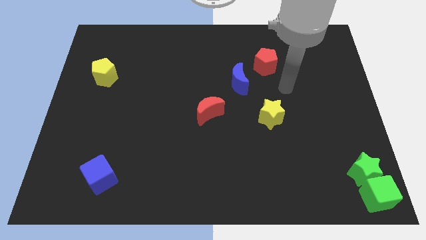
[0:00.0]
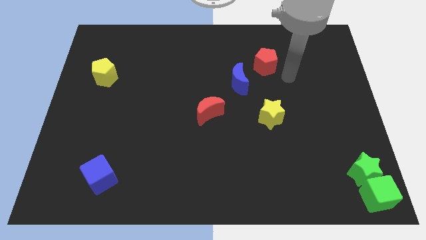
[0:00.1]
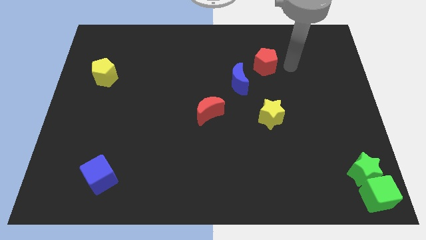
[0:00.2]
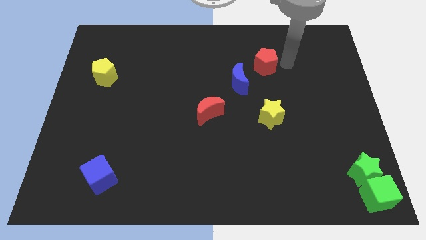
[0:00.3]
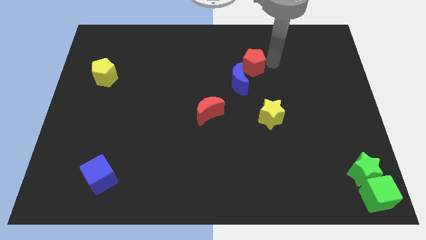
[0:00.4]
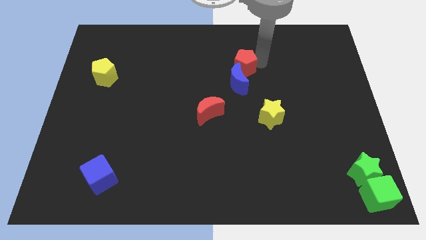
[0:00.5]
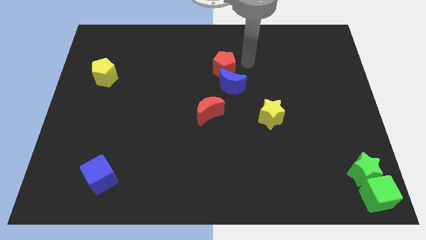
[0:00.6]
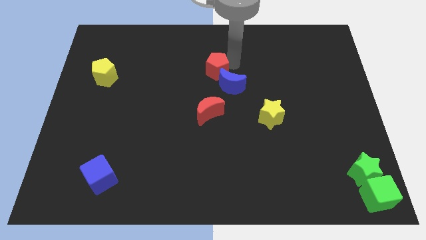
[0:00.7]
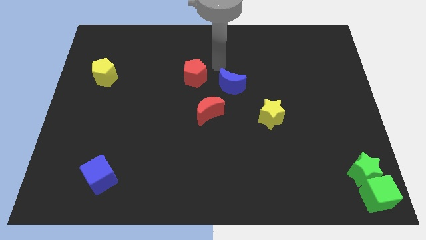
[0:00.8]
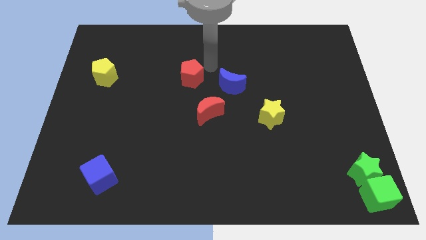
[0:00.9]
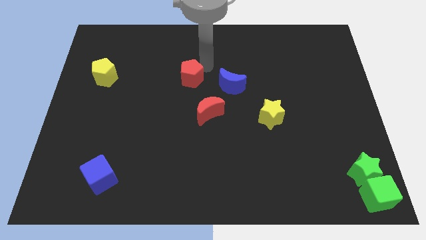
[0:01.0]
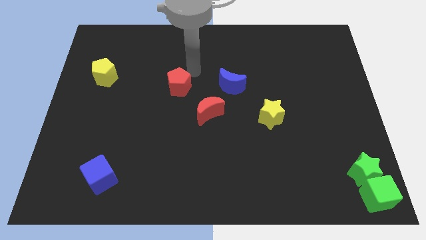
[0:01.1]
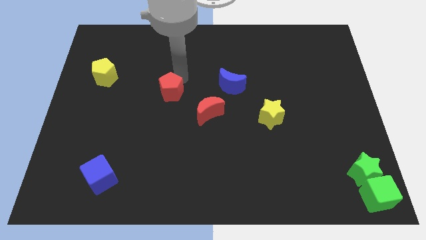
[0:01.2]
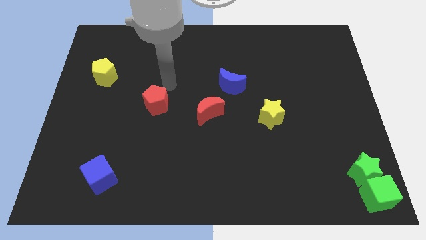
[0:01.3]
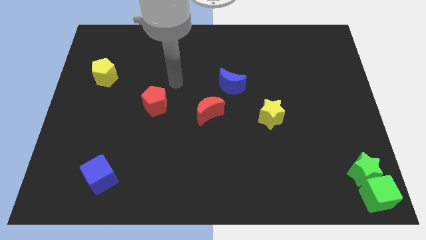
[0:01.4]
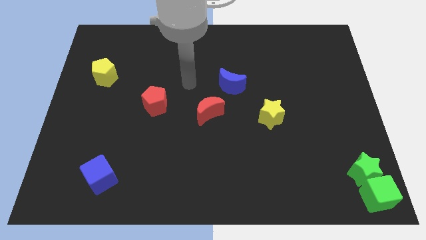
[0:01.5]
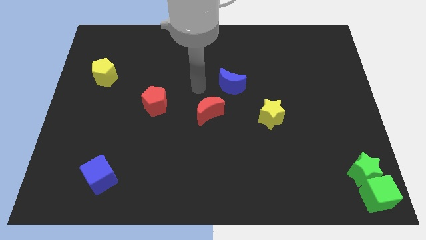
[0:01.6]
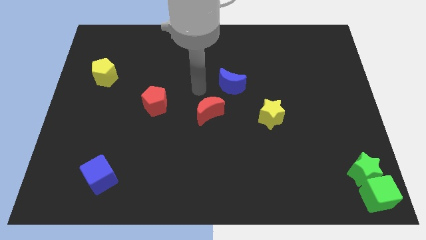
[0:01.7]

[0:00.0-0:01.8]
move the red pentagon to the parallel to the left of the red crescent

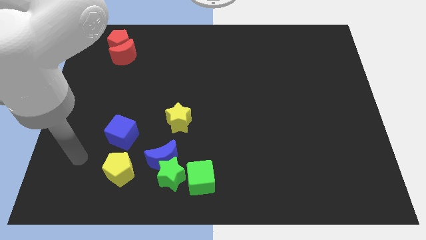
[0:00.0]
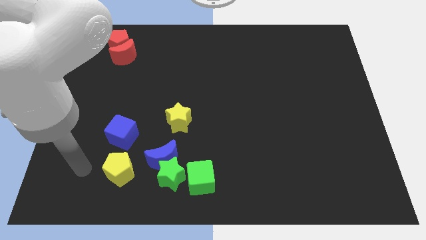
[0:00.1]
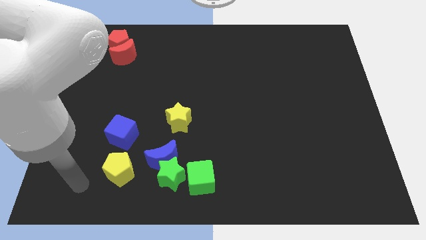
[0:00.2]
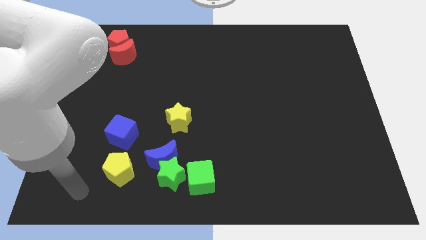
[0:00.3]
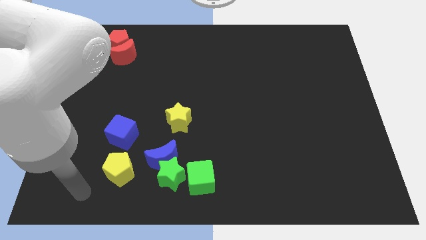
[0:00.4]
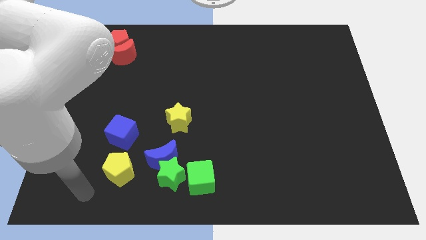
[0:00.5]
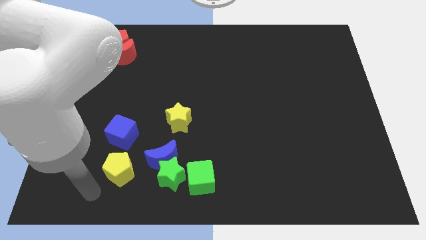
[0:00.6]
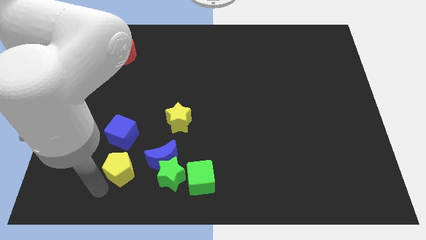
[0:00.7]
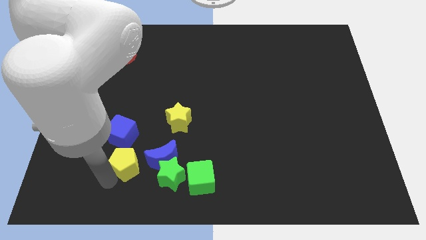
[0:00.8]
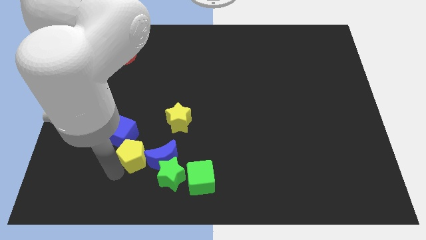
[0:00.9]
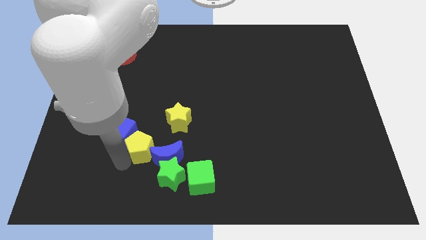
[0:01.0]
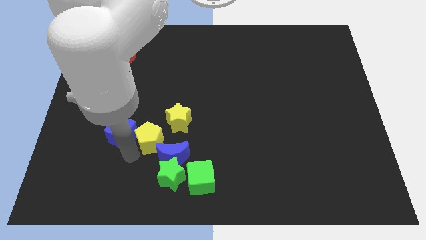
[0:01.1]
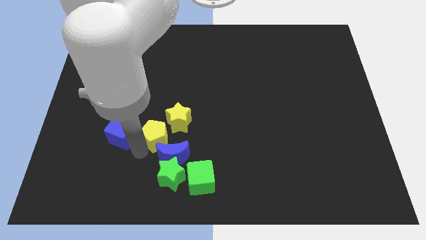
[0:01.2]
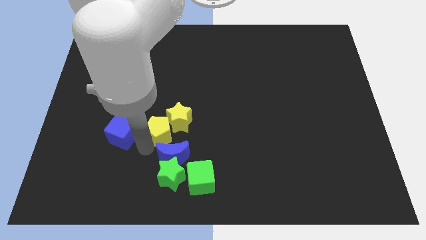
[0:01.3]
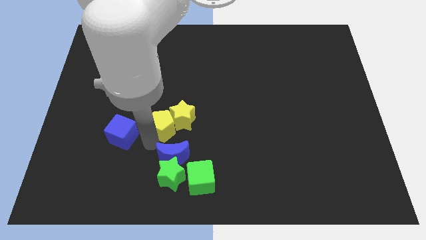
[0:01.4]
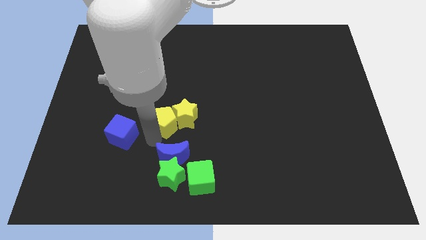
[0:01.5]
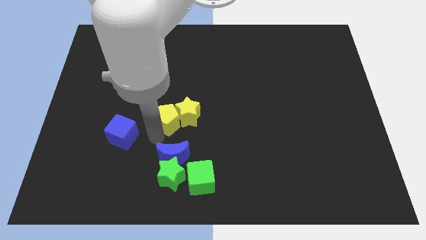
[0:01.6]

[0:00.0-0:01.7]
move the yellow pentagon to the yellow star

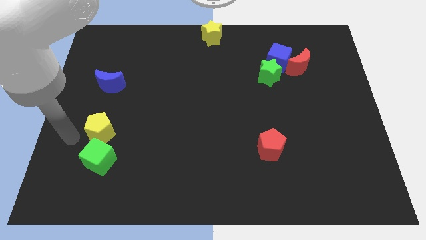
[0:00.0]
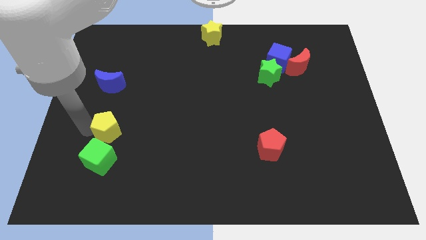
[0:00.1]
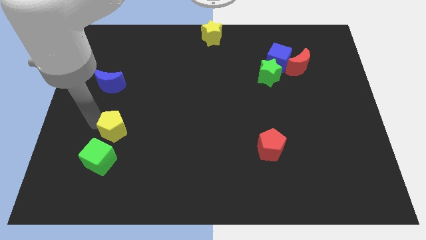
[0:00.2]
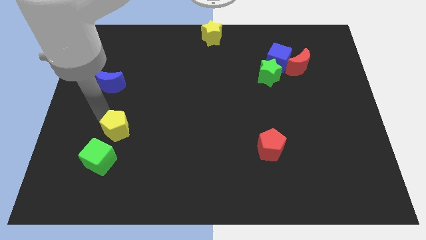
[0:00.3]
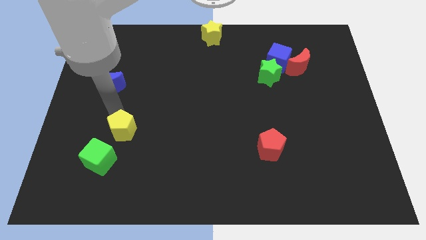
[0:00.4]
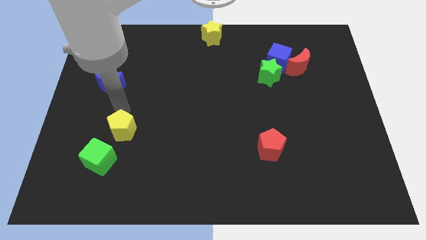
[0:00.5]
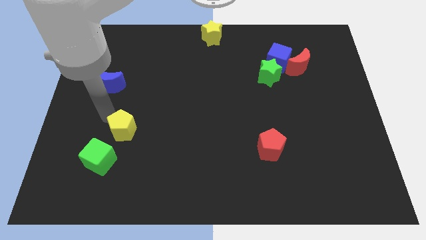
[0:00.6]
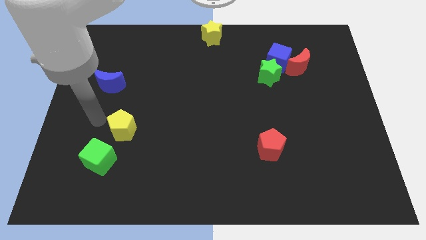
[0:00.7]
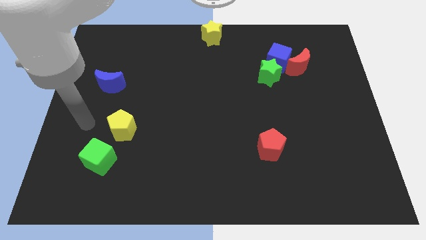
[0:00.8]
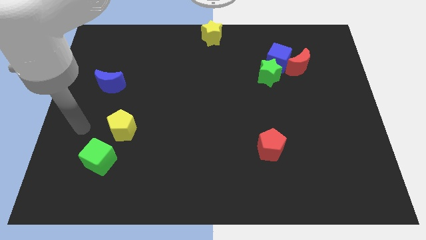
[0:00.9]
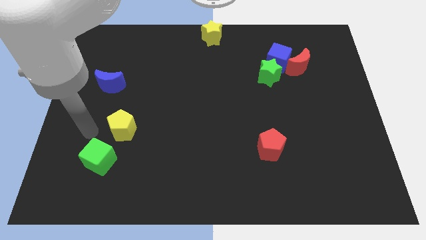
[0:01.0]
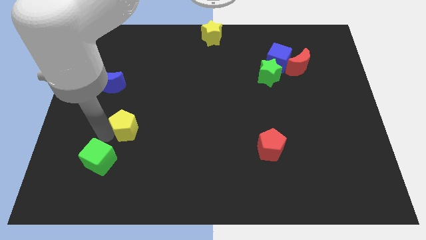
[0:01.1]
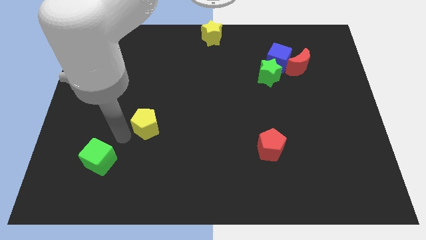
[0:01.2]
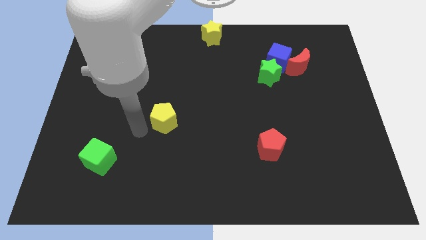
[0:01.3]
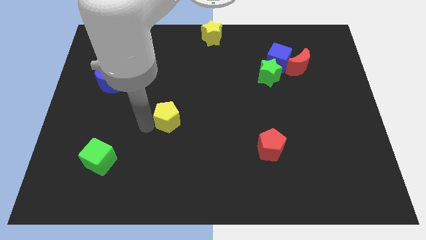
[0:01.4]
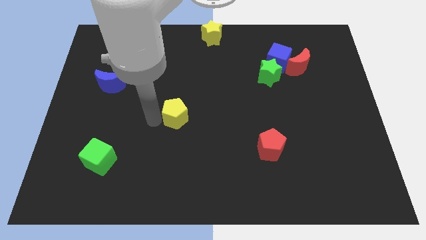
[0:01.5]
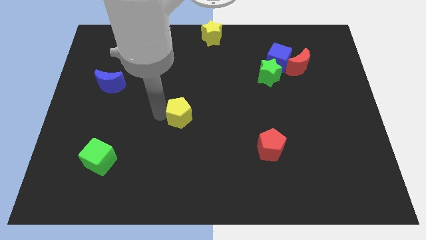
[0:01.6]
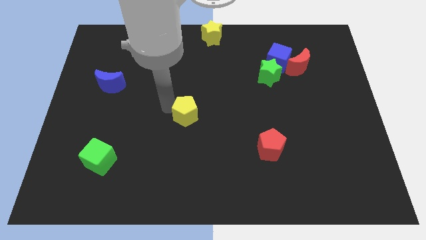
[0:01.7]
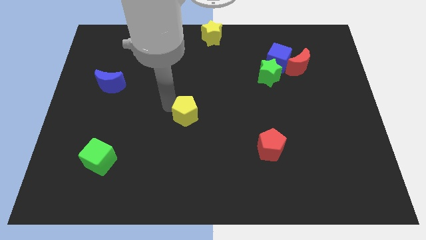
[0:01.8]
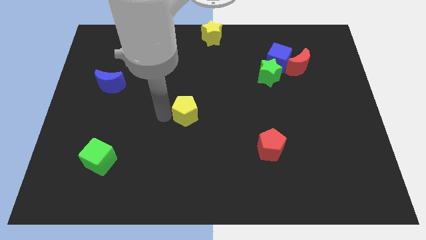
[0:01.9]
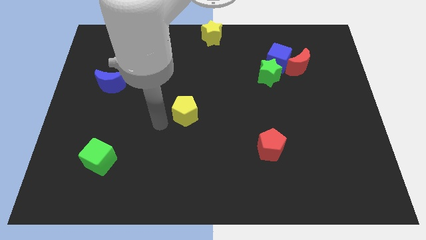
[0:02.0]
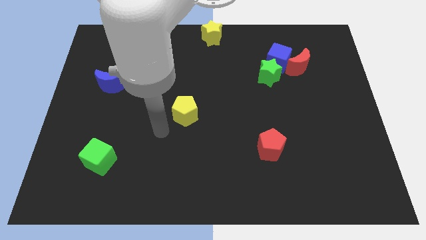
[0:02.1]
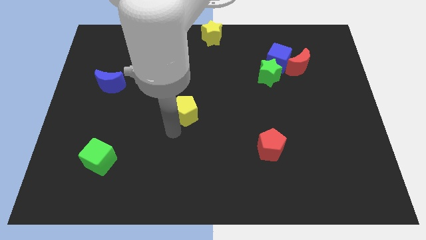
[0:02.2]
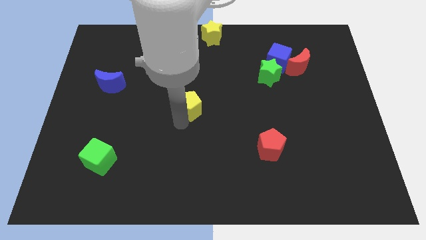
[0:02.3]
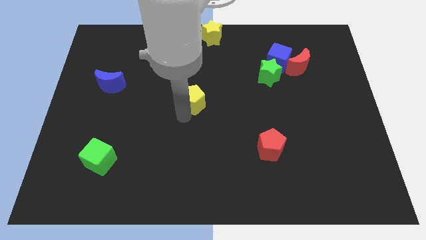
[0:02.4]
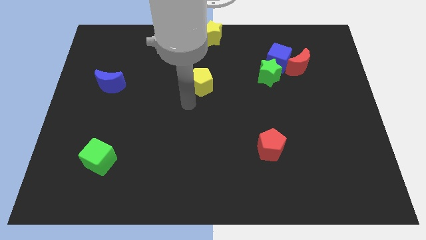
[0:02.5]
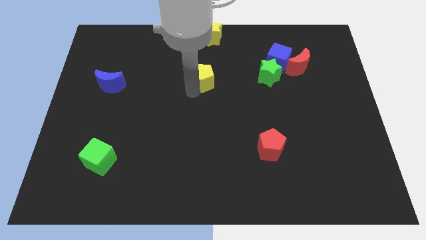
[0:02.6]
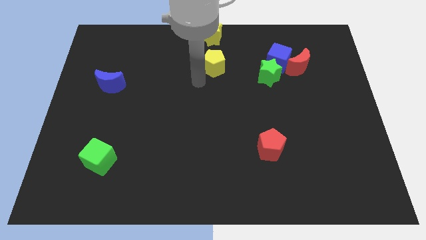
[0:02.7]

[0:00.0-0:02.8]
separate yellow pentagon from green cube

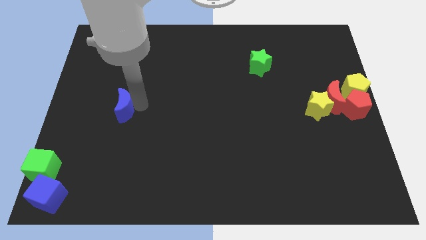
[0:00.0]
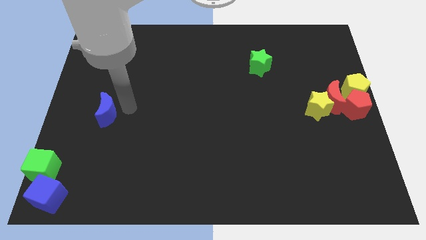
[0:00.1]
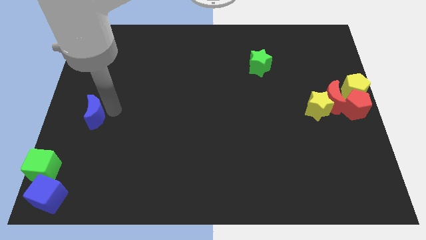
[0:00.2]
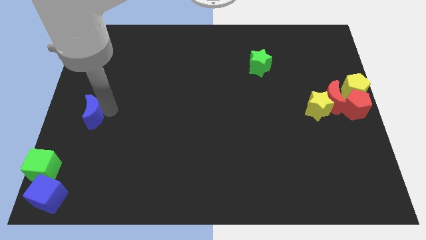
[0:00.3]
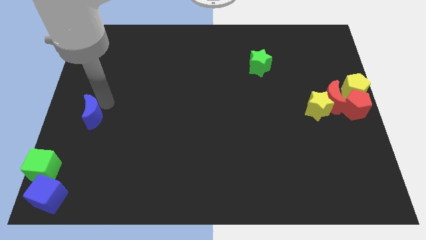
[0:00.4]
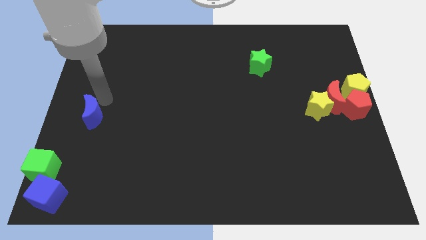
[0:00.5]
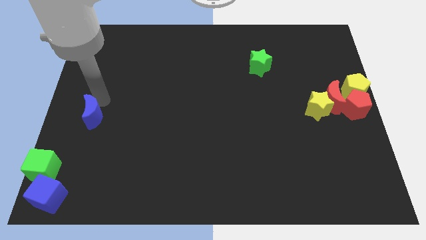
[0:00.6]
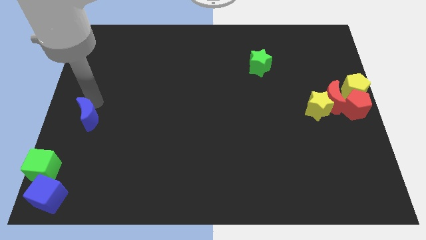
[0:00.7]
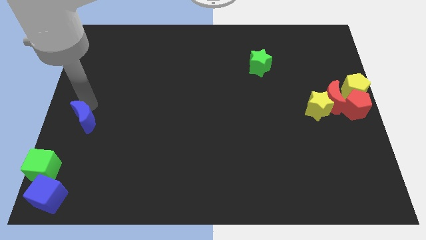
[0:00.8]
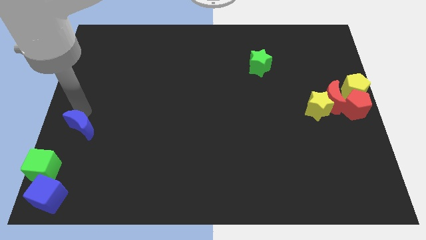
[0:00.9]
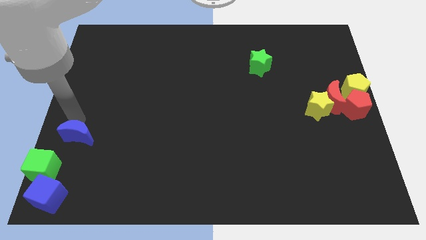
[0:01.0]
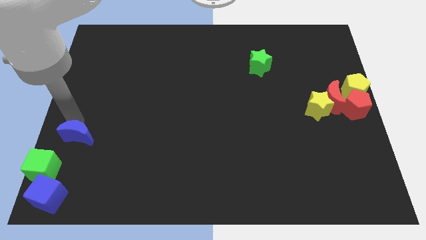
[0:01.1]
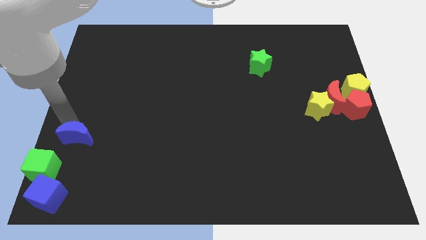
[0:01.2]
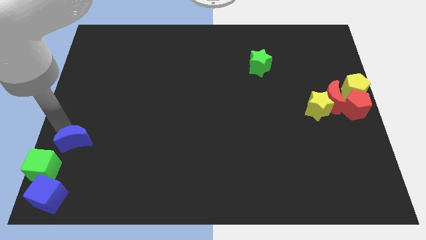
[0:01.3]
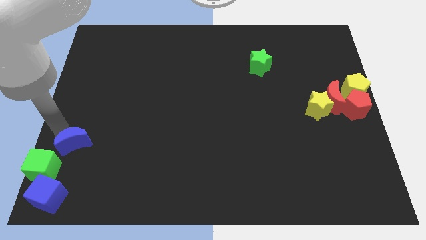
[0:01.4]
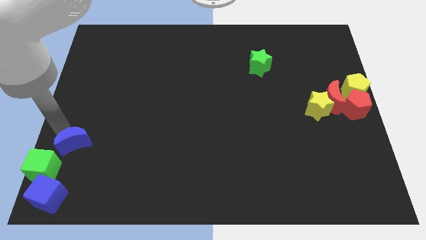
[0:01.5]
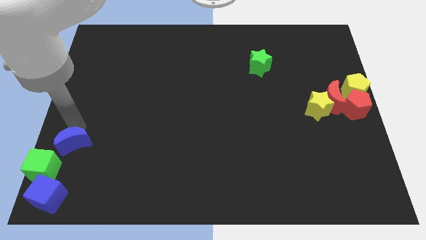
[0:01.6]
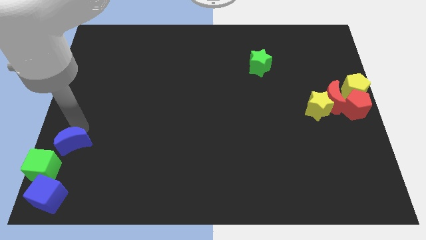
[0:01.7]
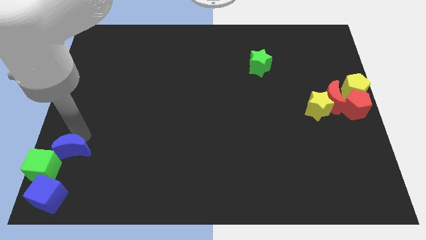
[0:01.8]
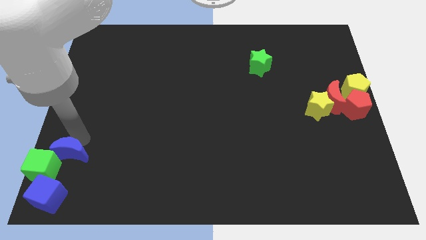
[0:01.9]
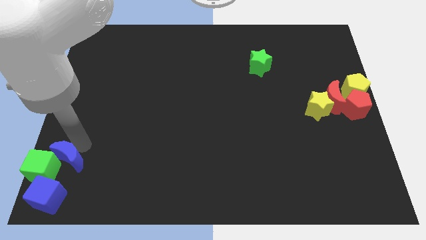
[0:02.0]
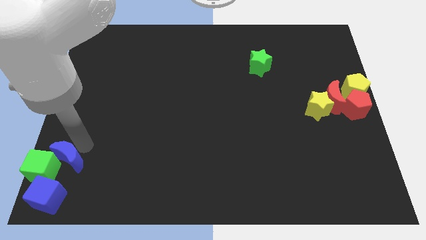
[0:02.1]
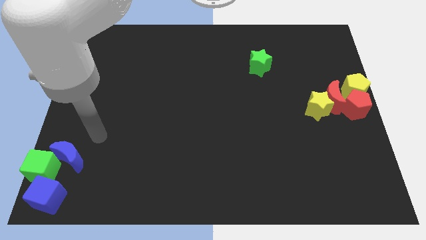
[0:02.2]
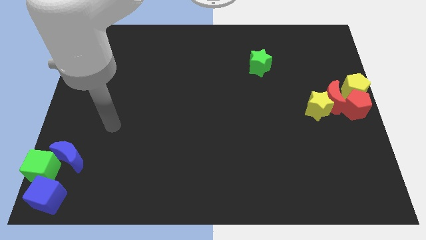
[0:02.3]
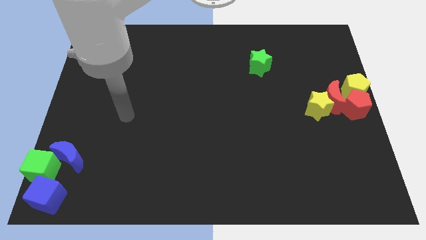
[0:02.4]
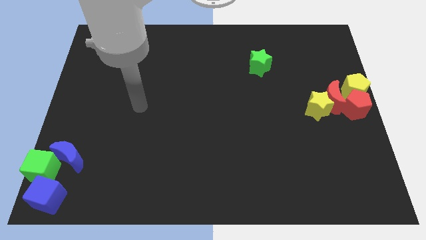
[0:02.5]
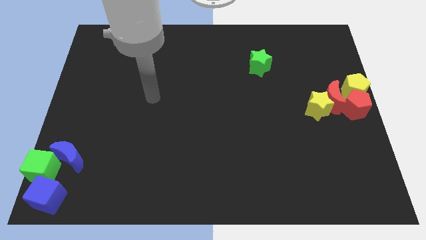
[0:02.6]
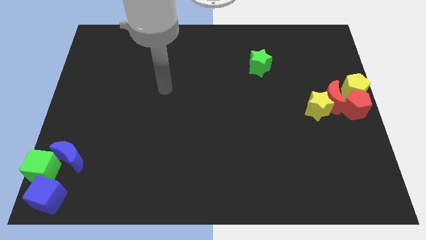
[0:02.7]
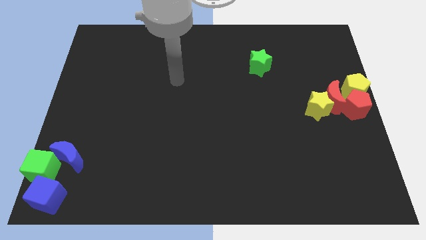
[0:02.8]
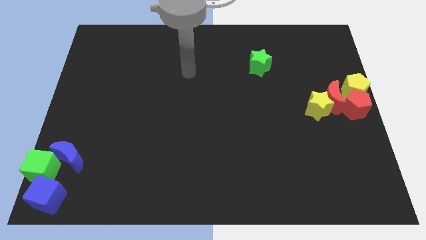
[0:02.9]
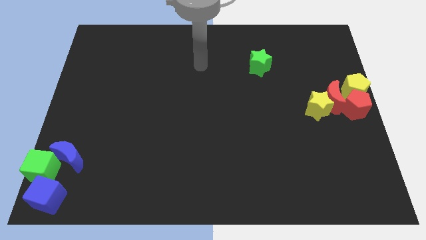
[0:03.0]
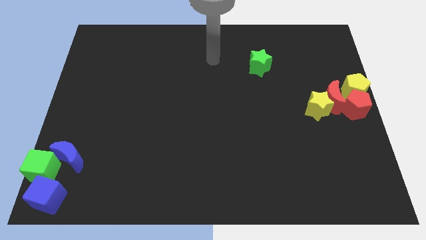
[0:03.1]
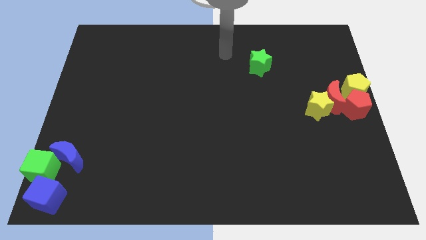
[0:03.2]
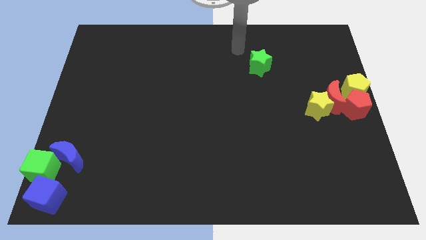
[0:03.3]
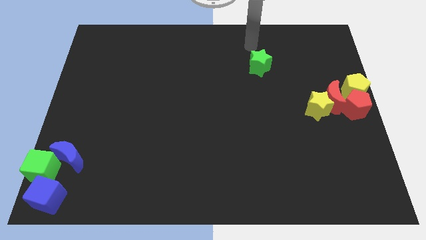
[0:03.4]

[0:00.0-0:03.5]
push the blue moon into the green cube
